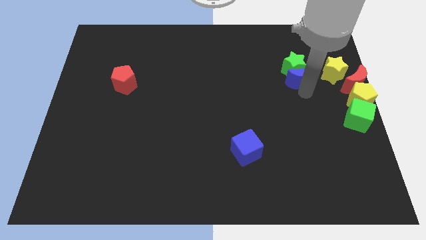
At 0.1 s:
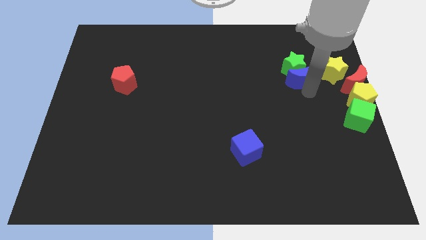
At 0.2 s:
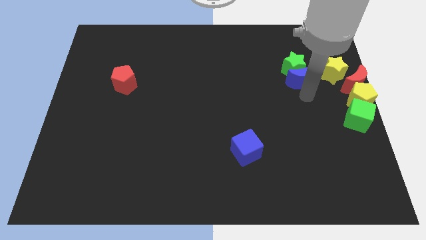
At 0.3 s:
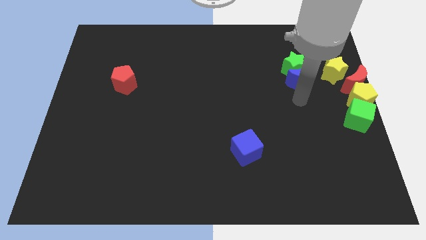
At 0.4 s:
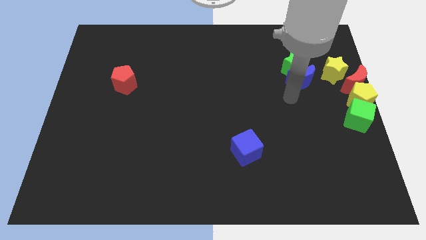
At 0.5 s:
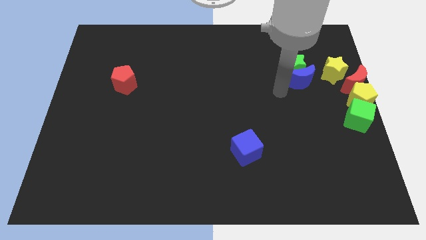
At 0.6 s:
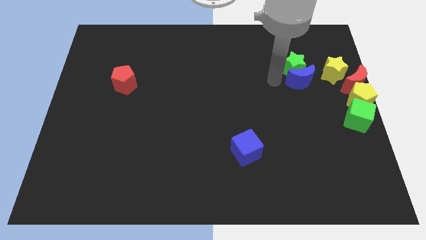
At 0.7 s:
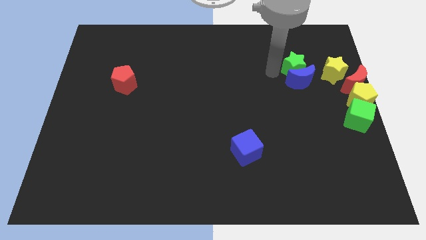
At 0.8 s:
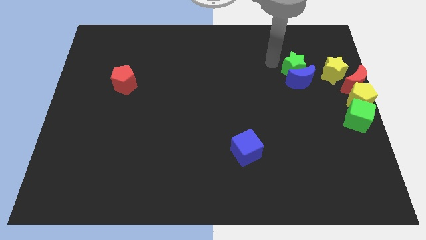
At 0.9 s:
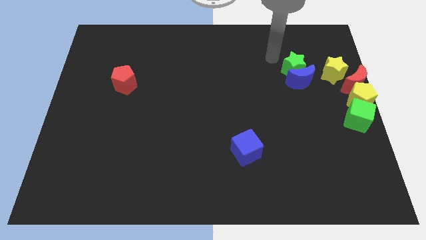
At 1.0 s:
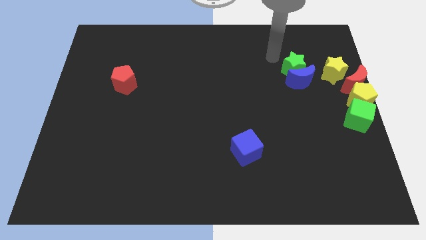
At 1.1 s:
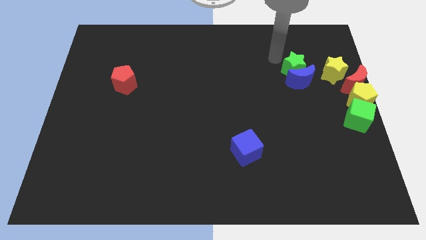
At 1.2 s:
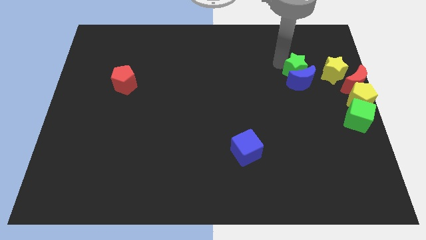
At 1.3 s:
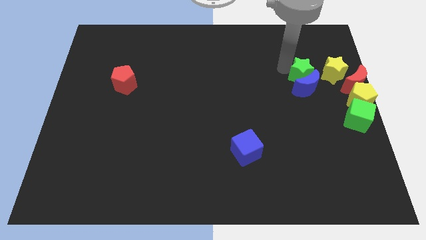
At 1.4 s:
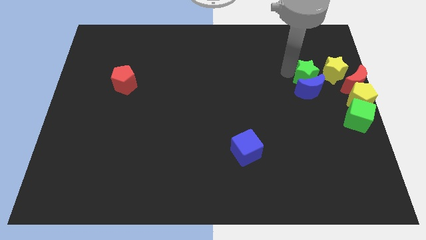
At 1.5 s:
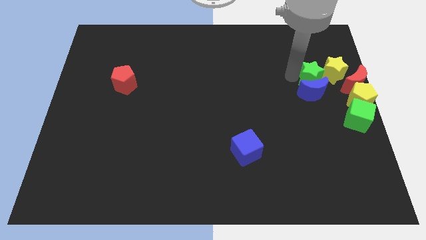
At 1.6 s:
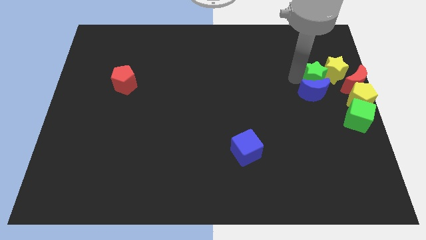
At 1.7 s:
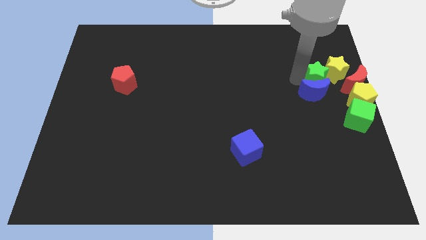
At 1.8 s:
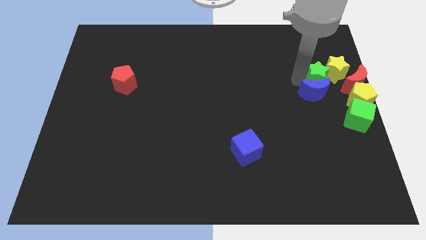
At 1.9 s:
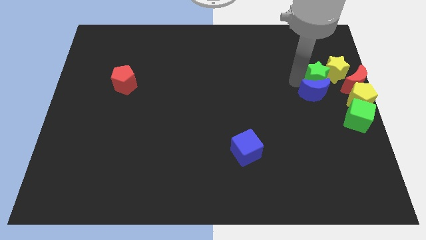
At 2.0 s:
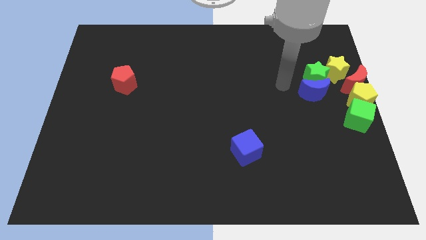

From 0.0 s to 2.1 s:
move the green star and blue crescent into the group of blocks at the right center of the board

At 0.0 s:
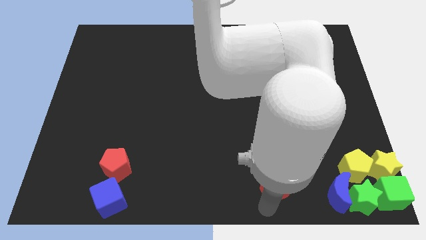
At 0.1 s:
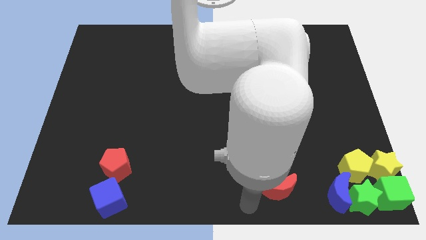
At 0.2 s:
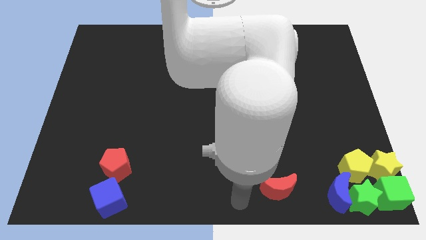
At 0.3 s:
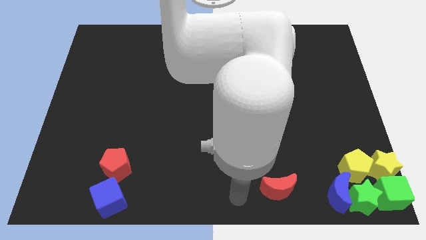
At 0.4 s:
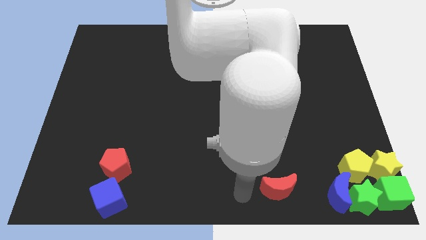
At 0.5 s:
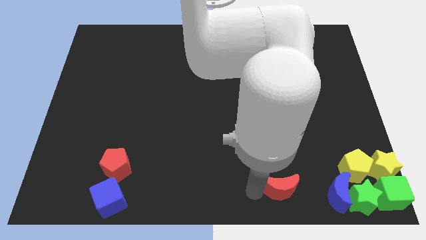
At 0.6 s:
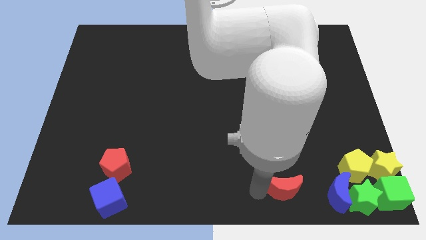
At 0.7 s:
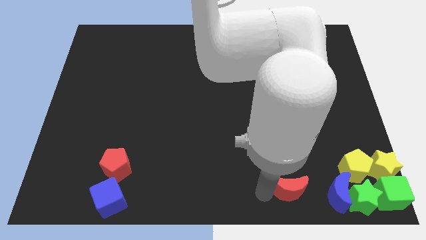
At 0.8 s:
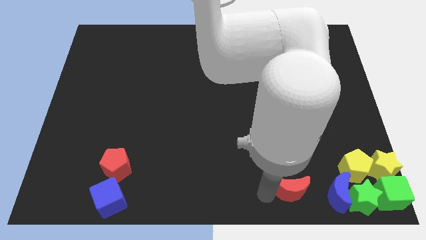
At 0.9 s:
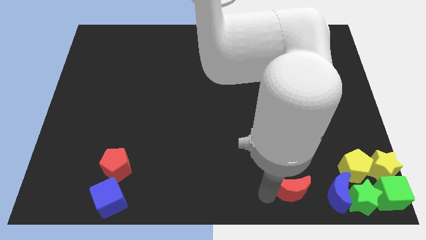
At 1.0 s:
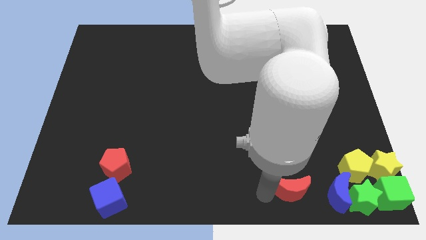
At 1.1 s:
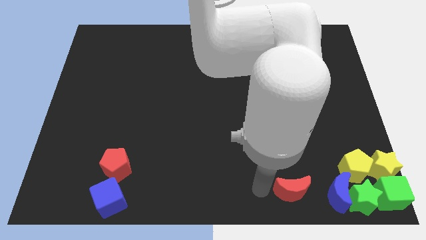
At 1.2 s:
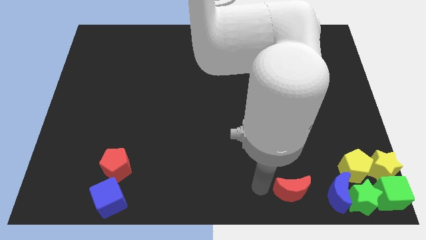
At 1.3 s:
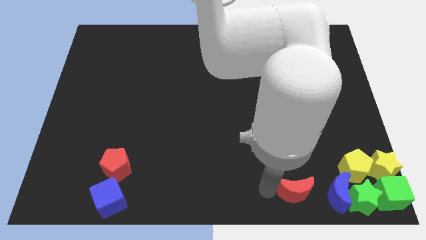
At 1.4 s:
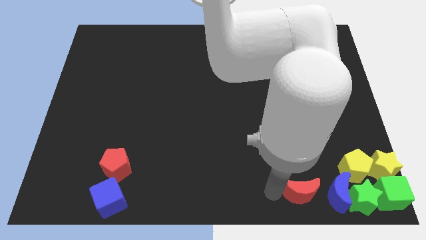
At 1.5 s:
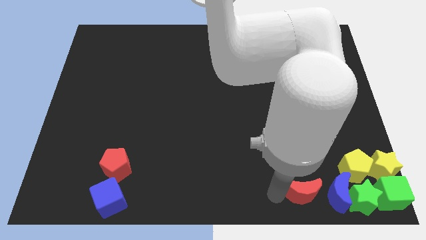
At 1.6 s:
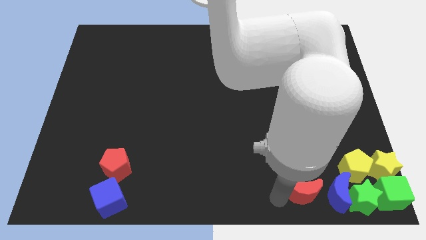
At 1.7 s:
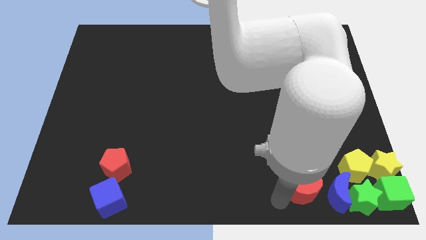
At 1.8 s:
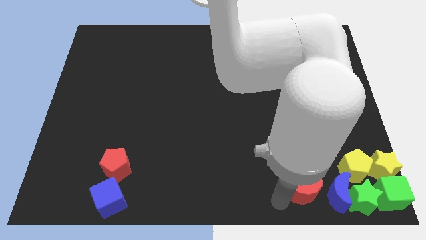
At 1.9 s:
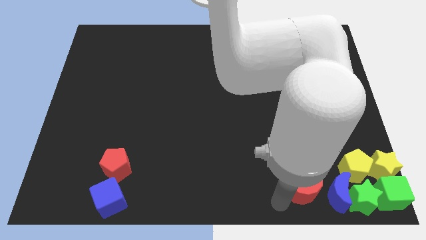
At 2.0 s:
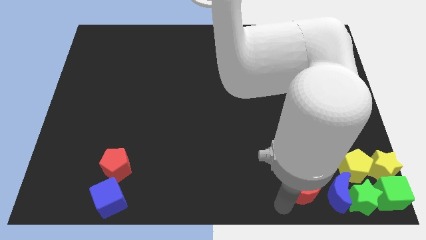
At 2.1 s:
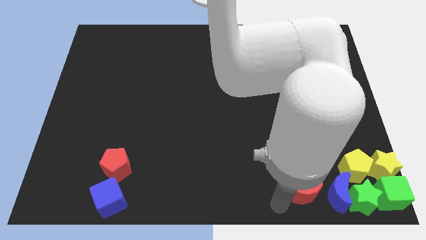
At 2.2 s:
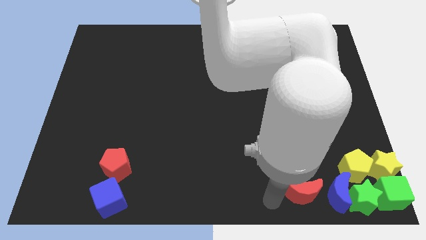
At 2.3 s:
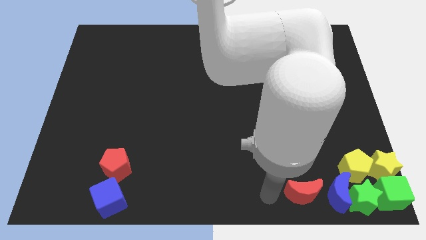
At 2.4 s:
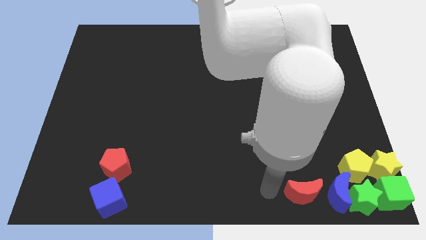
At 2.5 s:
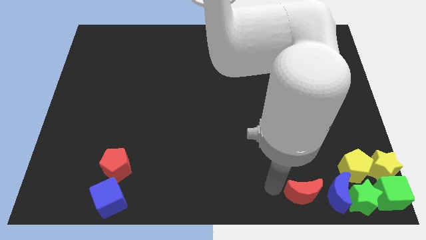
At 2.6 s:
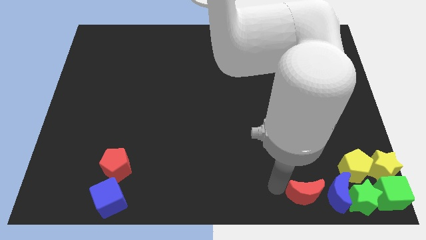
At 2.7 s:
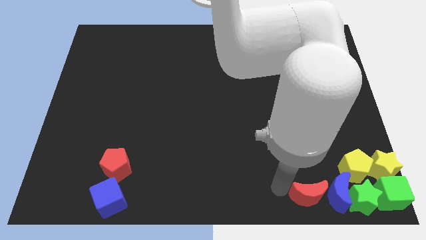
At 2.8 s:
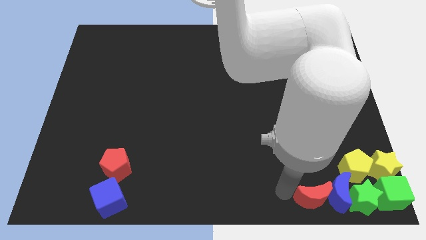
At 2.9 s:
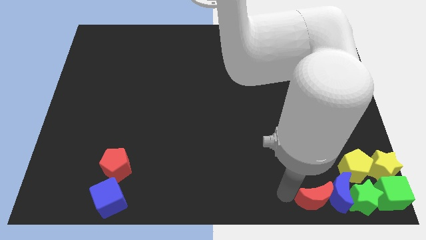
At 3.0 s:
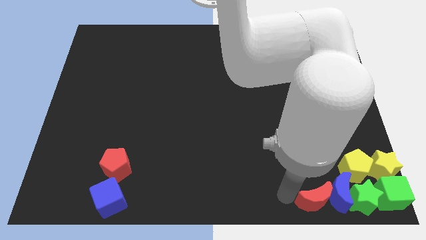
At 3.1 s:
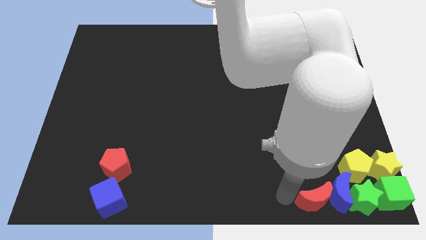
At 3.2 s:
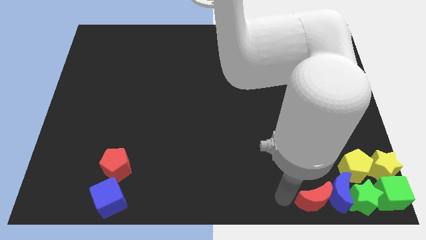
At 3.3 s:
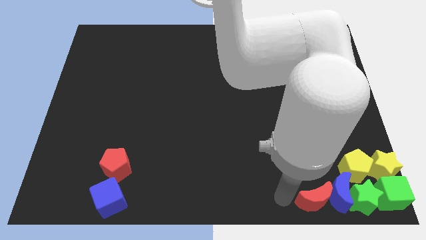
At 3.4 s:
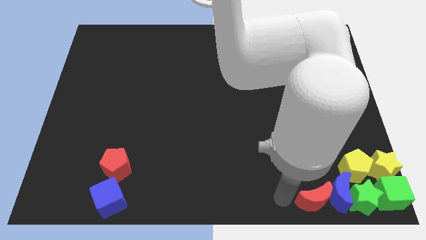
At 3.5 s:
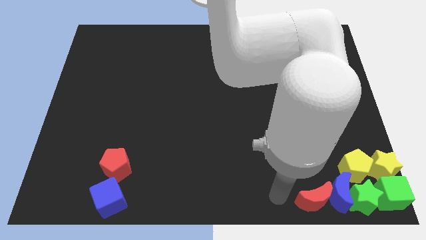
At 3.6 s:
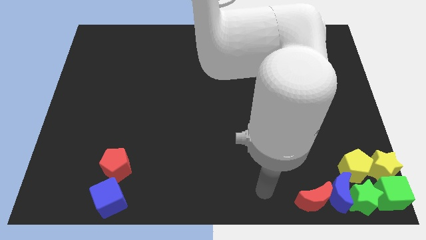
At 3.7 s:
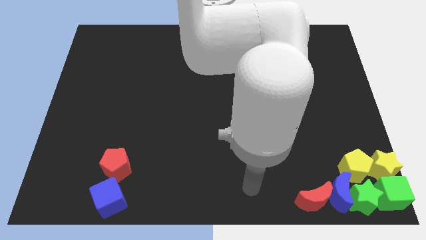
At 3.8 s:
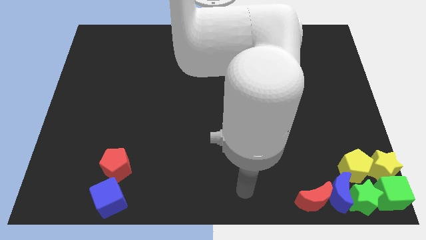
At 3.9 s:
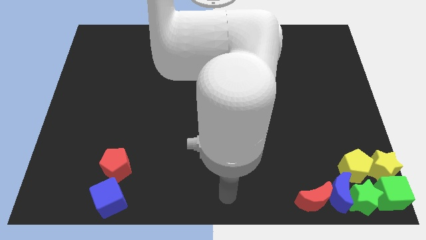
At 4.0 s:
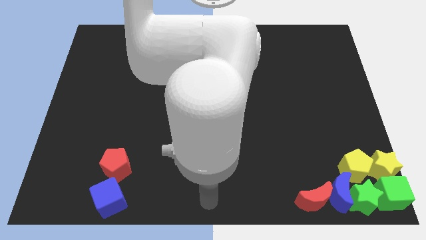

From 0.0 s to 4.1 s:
push the red crescent towards the blue crescent

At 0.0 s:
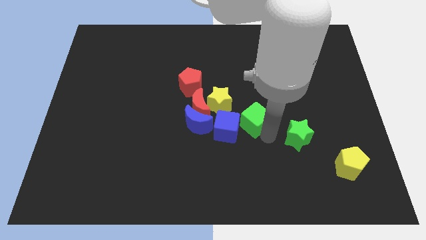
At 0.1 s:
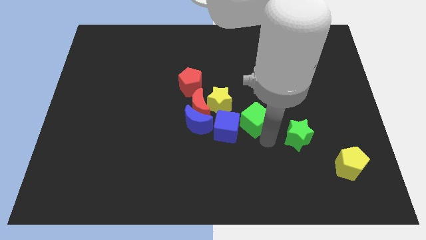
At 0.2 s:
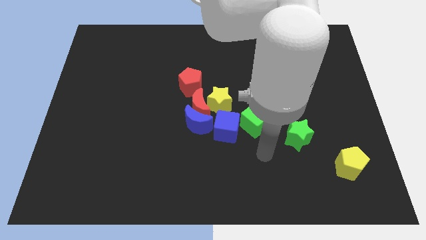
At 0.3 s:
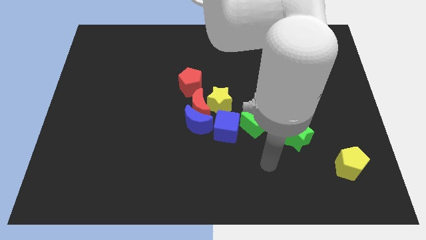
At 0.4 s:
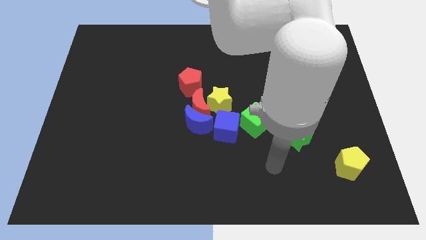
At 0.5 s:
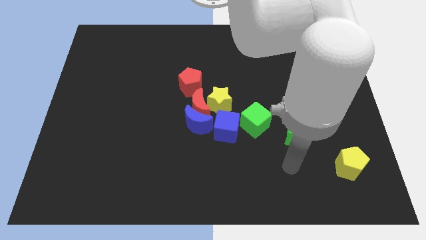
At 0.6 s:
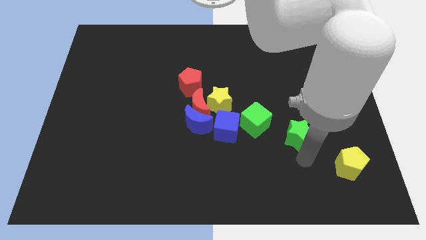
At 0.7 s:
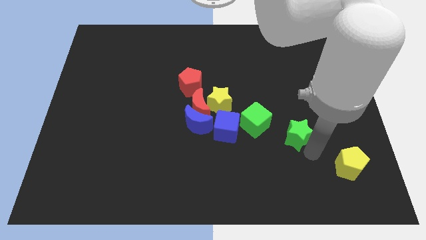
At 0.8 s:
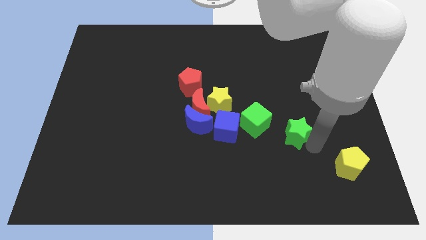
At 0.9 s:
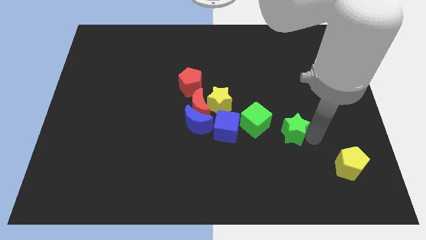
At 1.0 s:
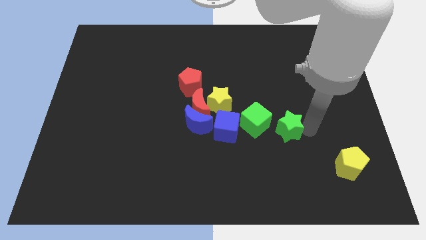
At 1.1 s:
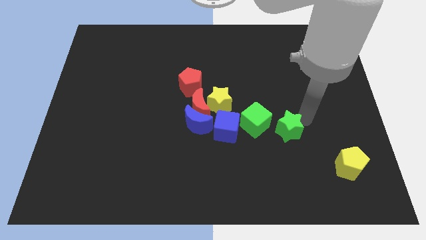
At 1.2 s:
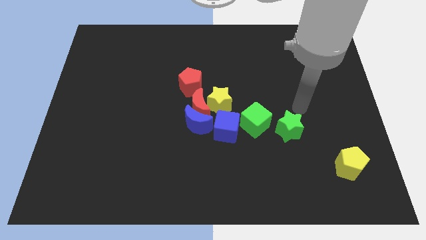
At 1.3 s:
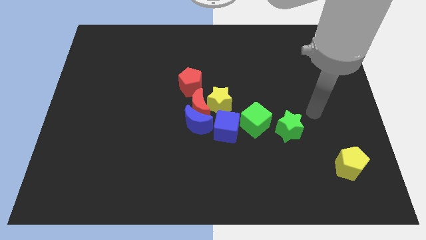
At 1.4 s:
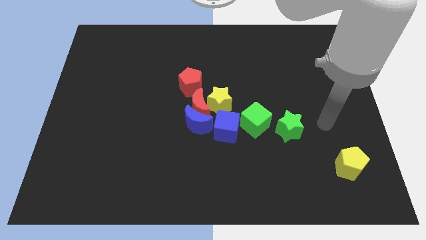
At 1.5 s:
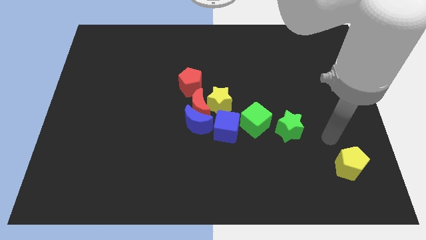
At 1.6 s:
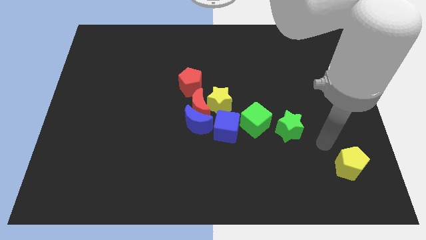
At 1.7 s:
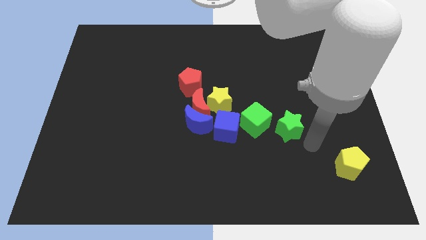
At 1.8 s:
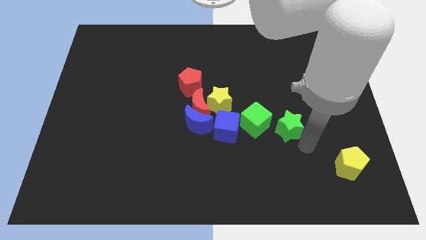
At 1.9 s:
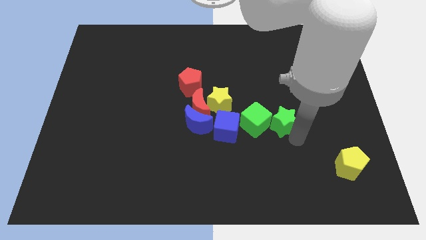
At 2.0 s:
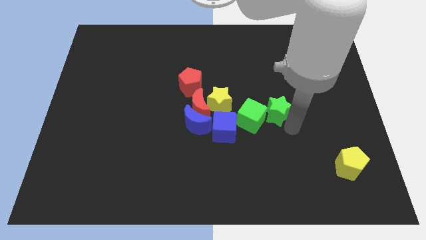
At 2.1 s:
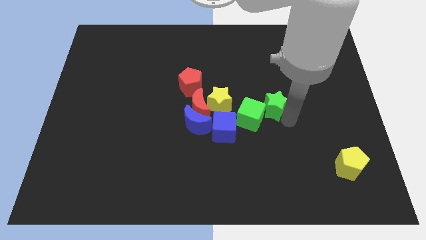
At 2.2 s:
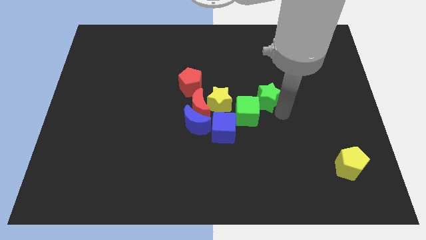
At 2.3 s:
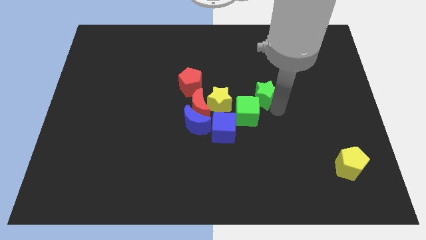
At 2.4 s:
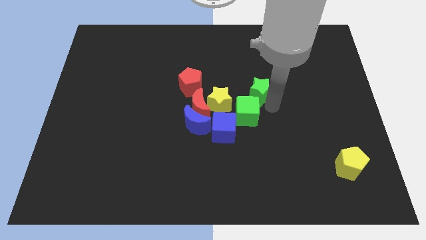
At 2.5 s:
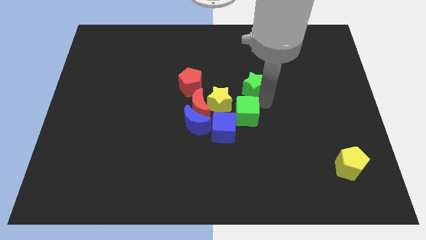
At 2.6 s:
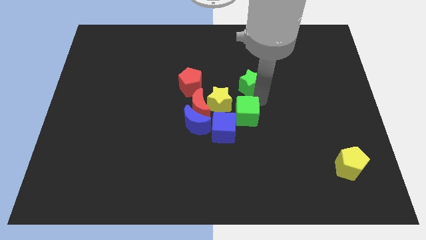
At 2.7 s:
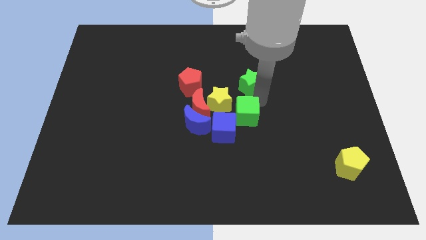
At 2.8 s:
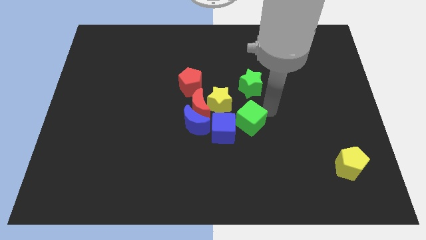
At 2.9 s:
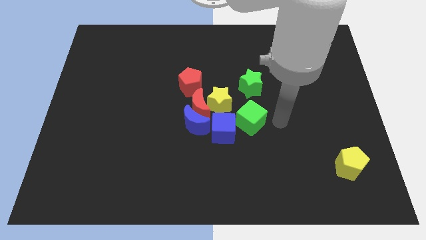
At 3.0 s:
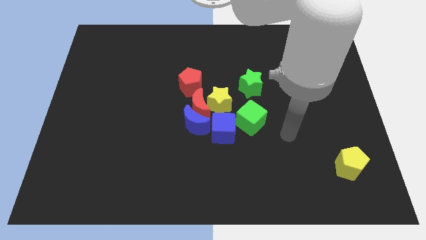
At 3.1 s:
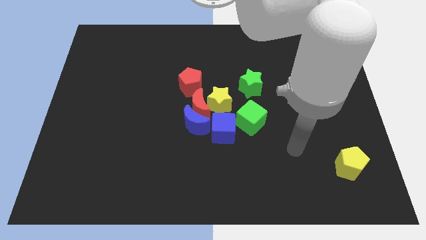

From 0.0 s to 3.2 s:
move the green star above the top side of the green cube
